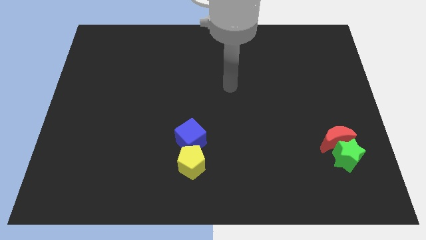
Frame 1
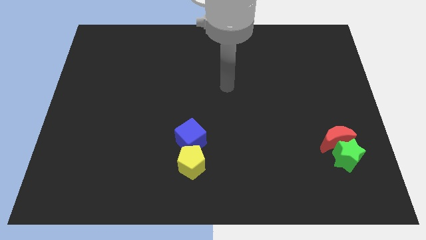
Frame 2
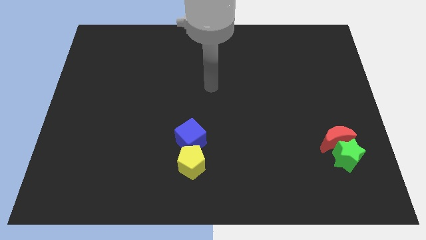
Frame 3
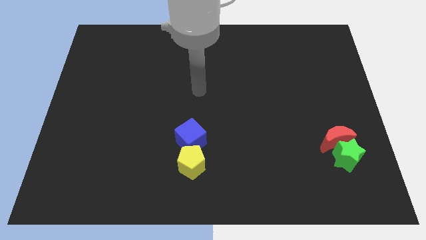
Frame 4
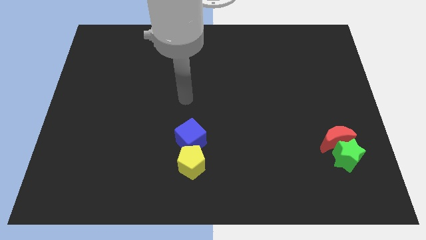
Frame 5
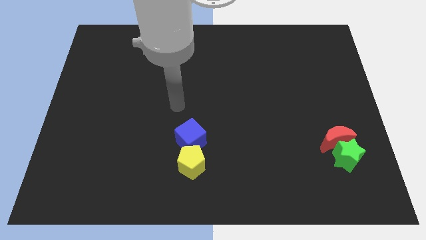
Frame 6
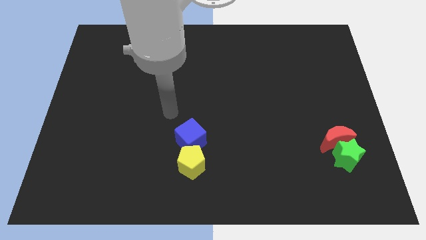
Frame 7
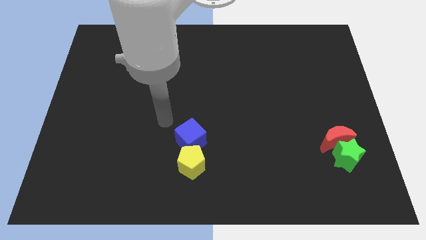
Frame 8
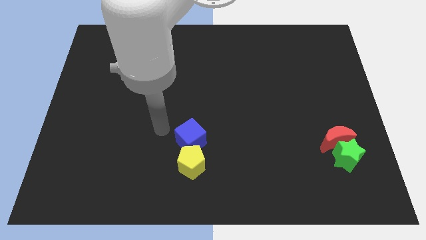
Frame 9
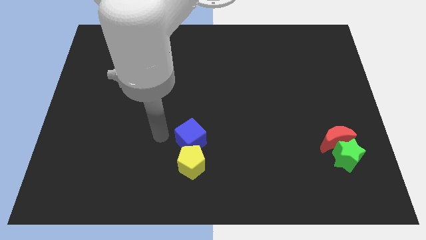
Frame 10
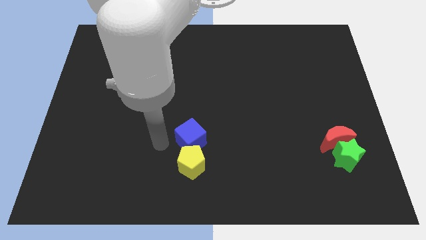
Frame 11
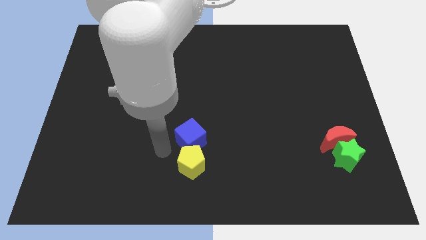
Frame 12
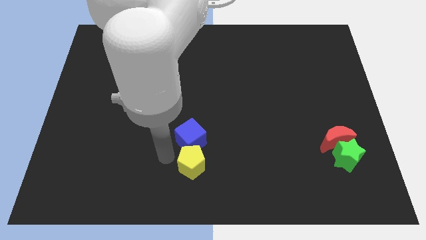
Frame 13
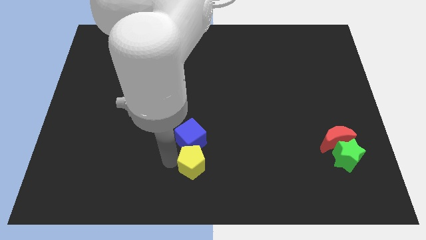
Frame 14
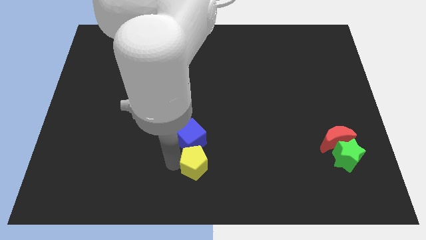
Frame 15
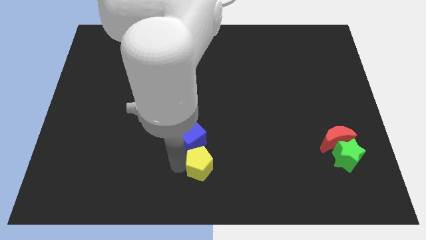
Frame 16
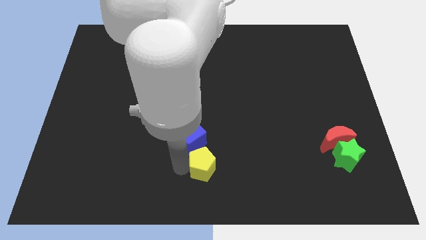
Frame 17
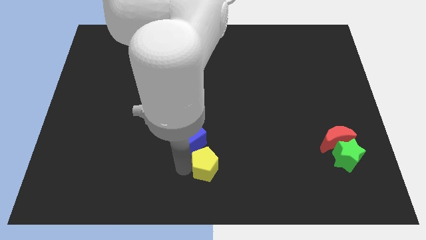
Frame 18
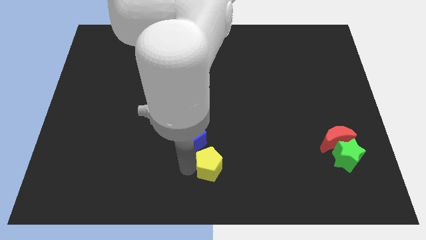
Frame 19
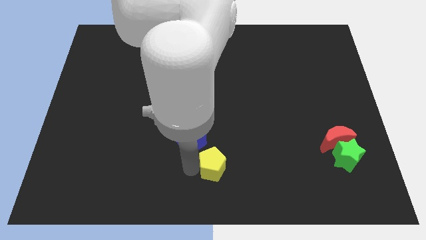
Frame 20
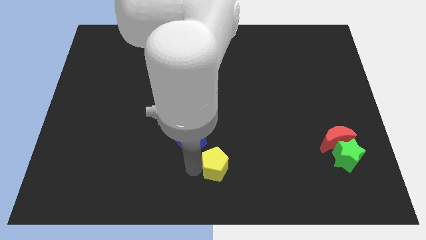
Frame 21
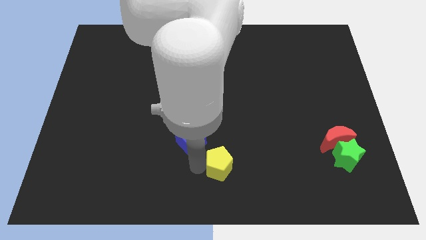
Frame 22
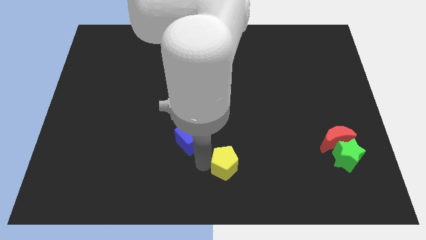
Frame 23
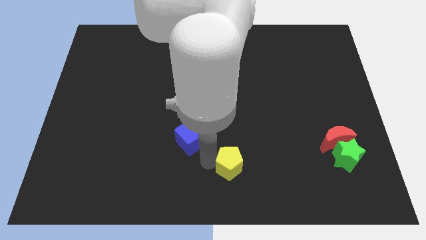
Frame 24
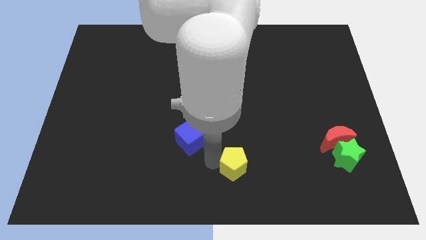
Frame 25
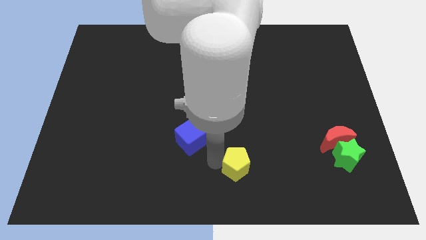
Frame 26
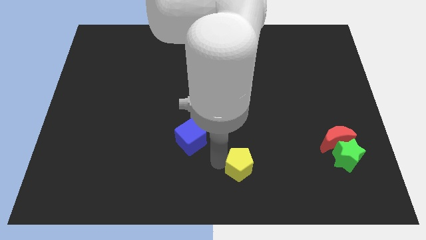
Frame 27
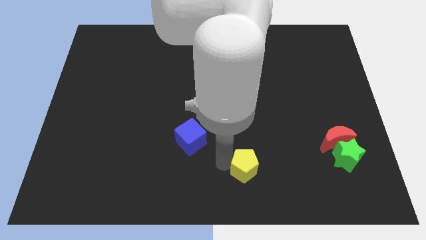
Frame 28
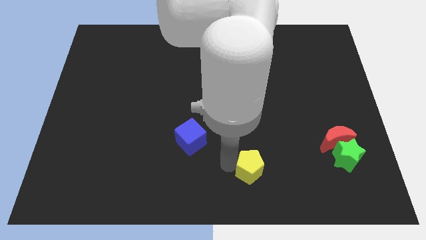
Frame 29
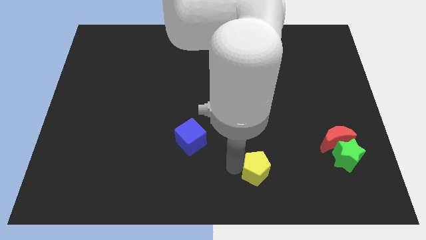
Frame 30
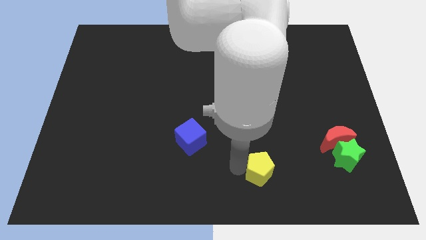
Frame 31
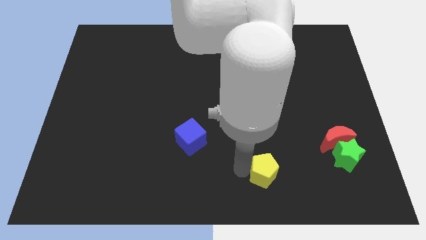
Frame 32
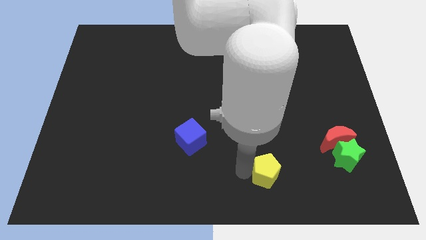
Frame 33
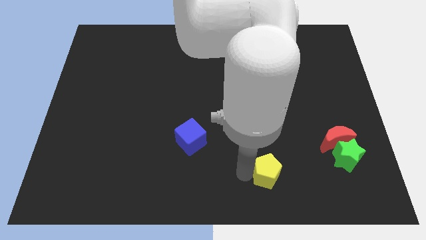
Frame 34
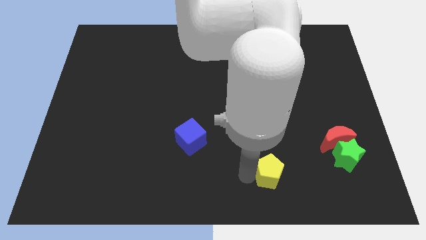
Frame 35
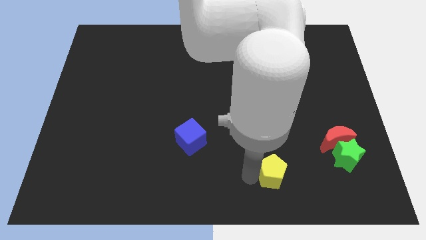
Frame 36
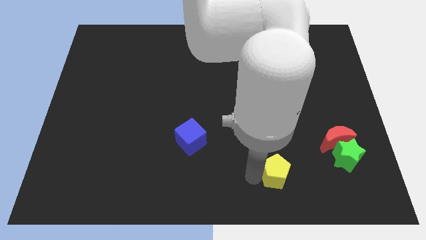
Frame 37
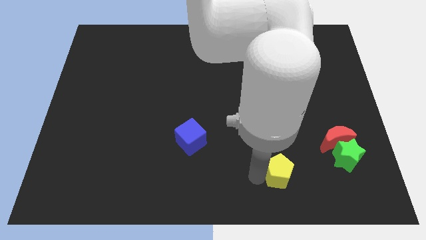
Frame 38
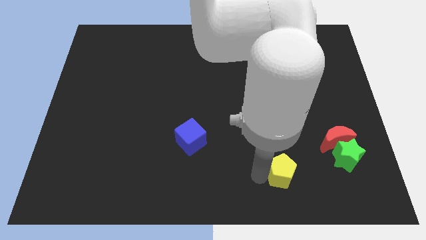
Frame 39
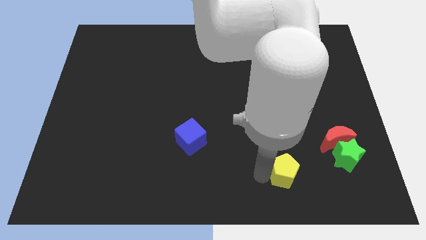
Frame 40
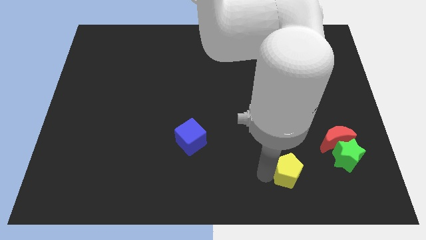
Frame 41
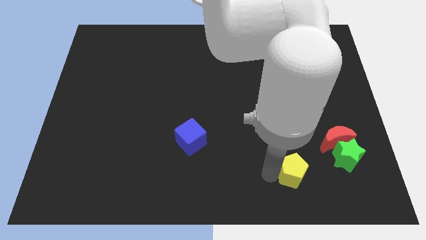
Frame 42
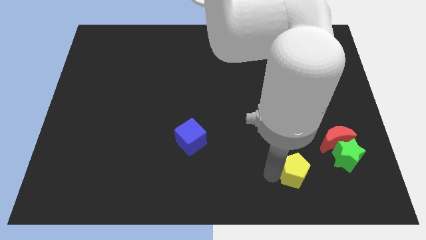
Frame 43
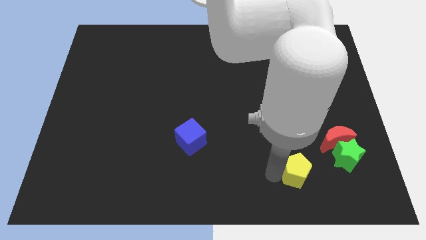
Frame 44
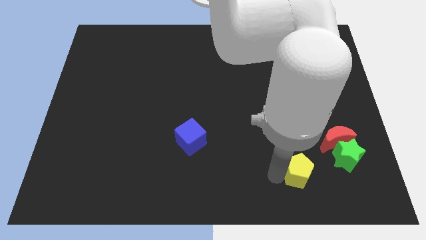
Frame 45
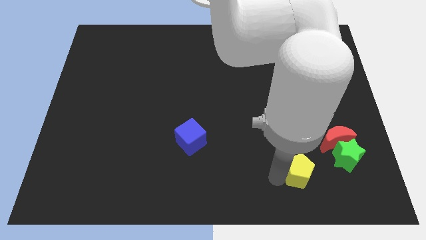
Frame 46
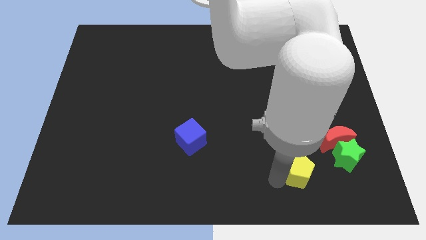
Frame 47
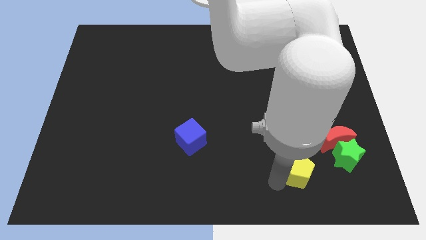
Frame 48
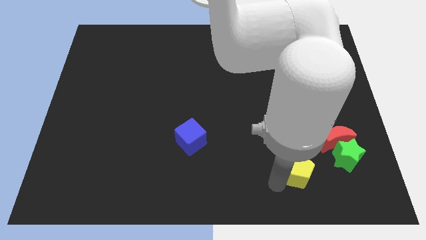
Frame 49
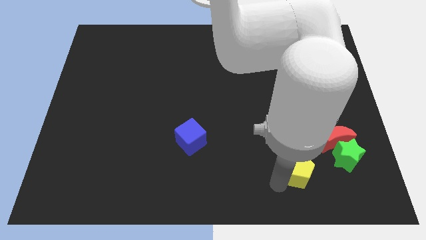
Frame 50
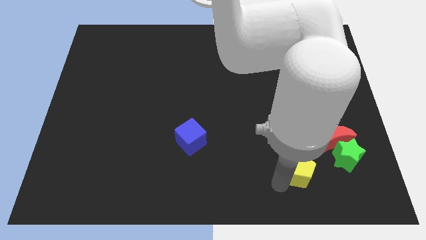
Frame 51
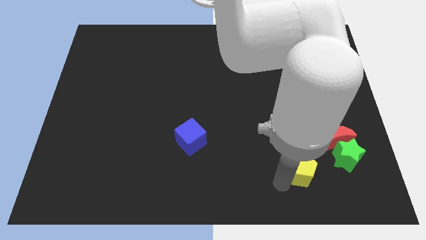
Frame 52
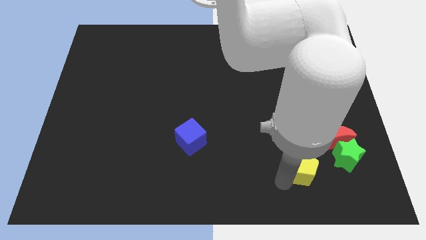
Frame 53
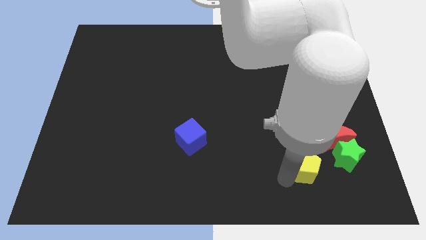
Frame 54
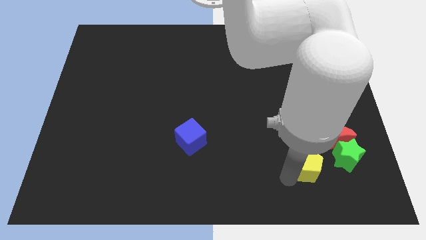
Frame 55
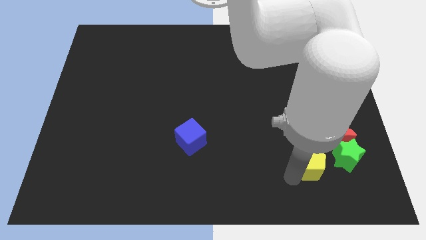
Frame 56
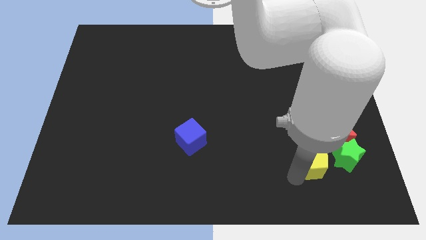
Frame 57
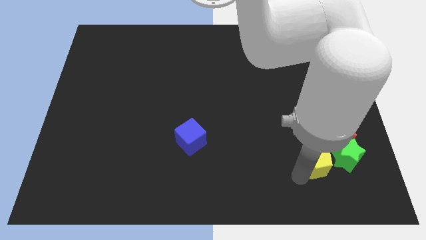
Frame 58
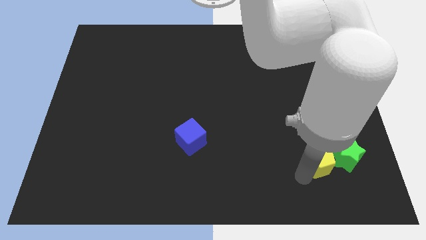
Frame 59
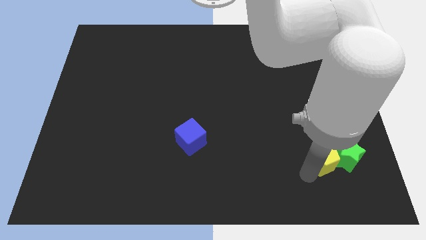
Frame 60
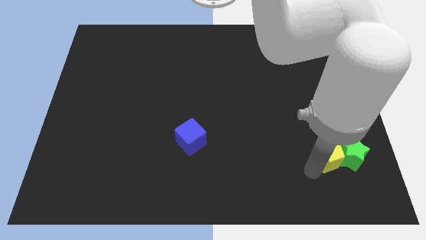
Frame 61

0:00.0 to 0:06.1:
push the yellow pentagon next to the green block

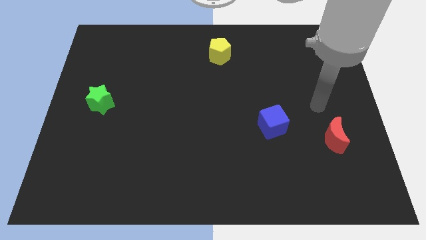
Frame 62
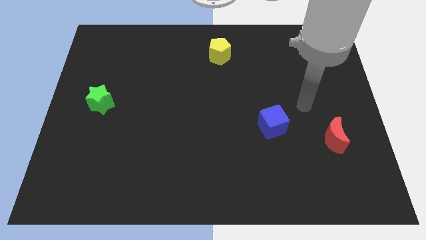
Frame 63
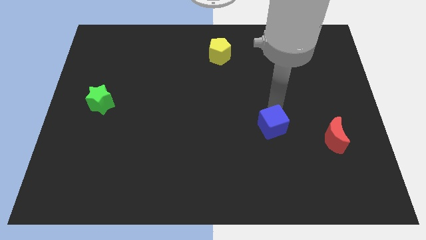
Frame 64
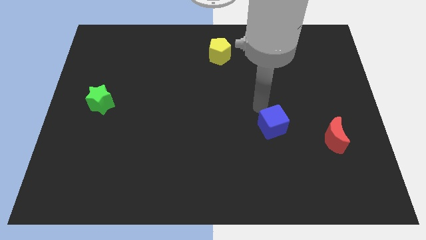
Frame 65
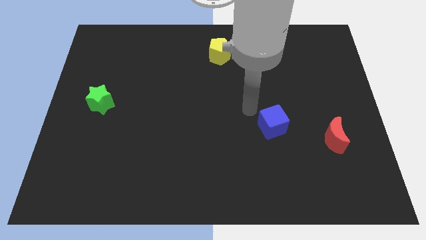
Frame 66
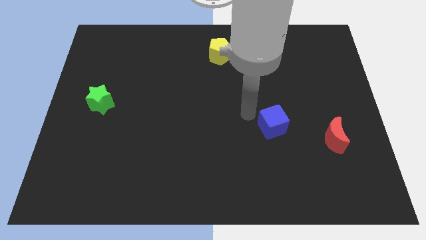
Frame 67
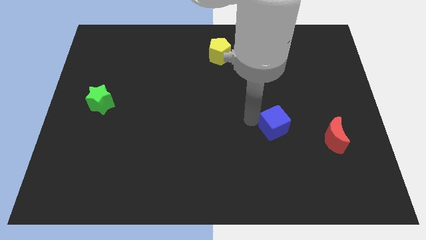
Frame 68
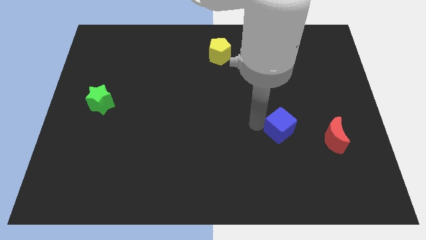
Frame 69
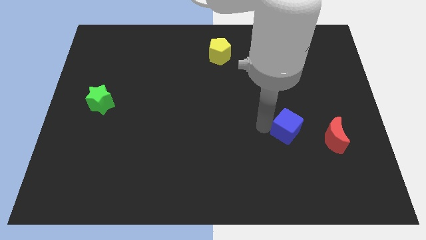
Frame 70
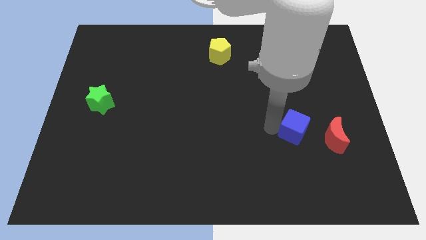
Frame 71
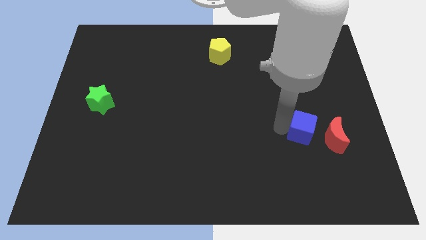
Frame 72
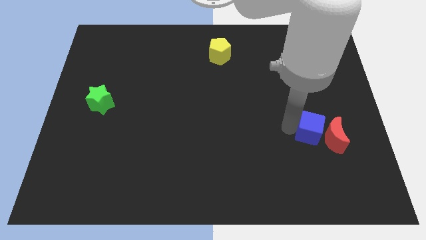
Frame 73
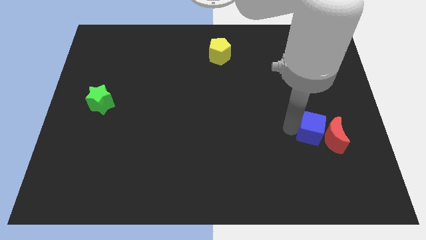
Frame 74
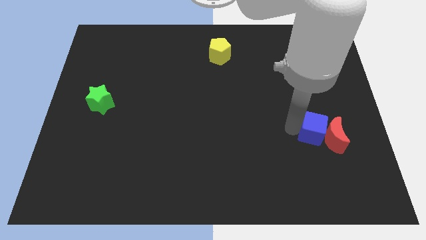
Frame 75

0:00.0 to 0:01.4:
push the blue cube towards the red moon

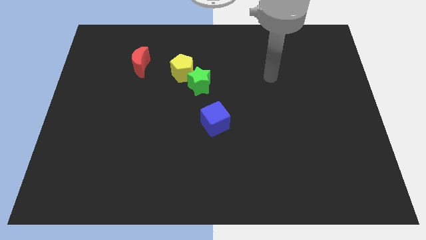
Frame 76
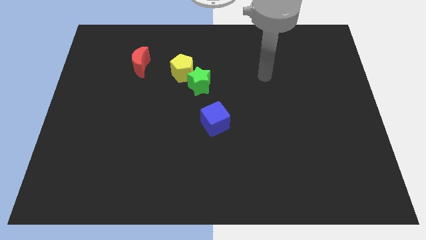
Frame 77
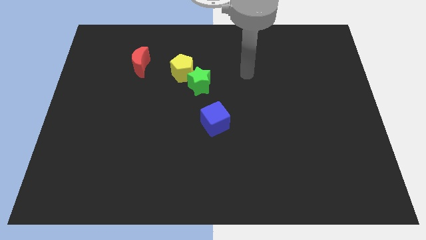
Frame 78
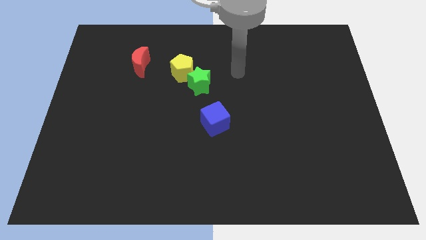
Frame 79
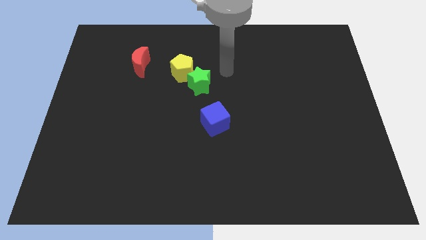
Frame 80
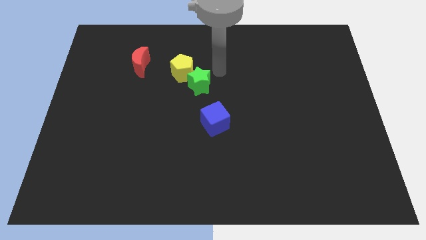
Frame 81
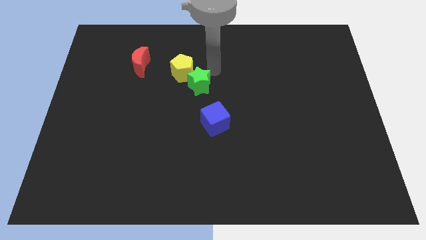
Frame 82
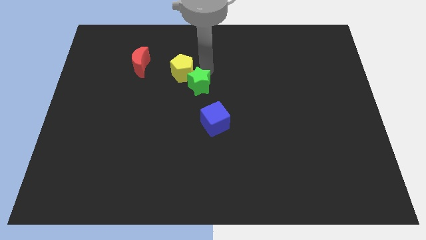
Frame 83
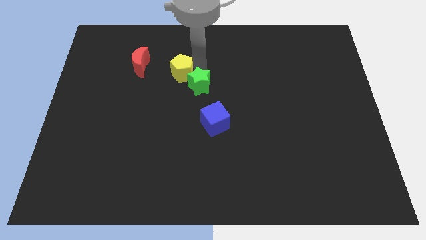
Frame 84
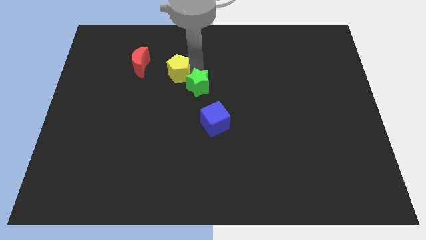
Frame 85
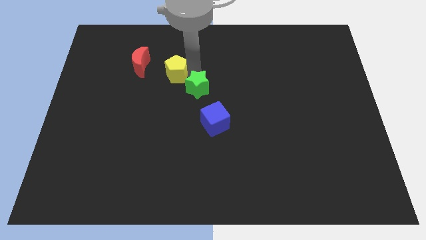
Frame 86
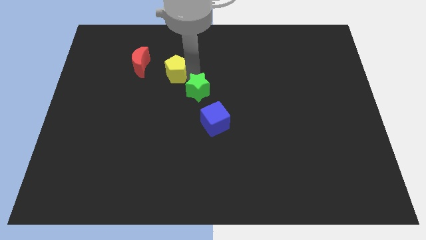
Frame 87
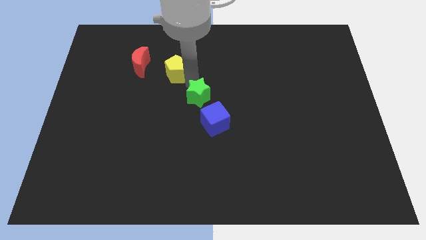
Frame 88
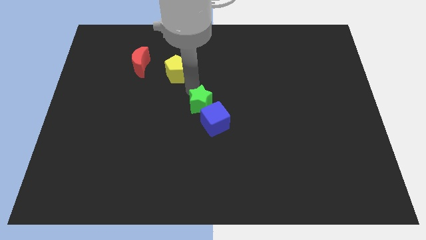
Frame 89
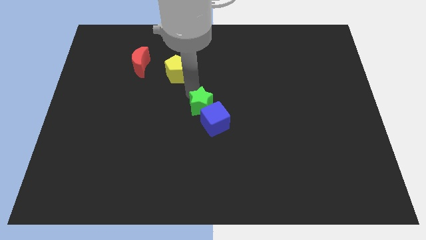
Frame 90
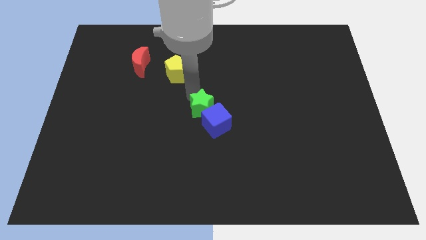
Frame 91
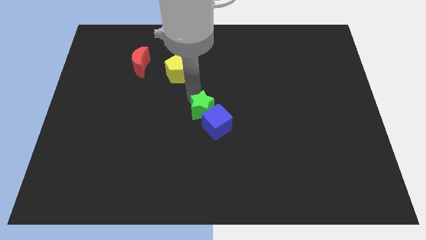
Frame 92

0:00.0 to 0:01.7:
put the green star to the cube
